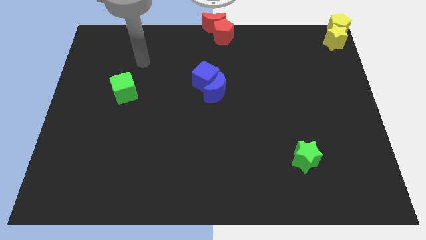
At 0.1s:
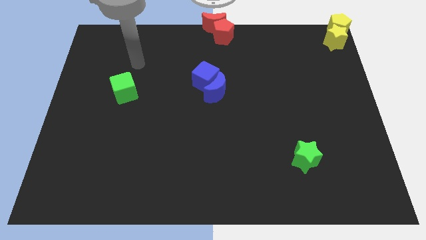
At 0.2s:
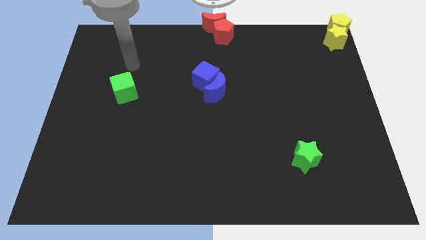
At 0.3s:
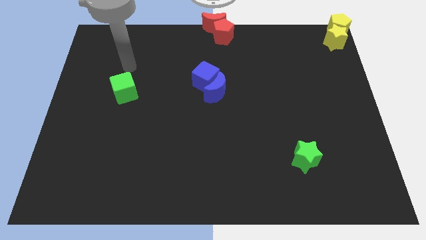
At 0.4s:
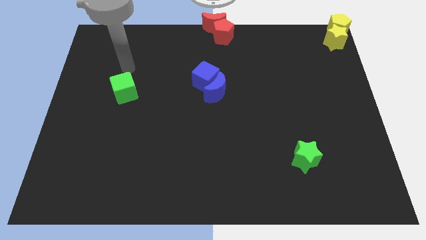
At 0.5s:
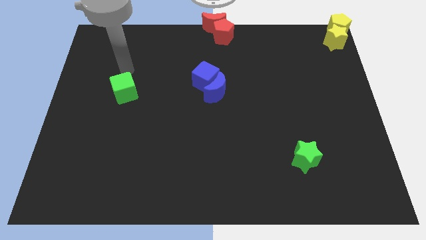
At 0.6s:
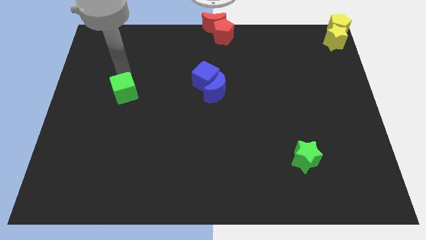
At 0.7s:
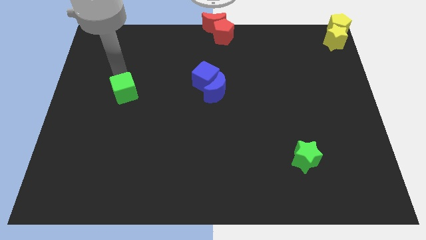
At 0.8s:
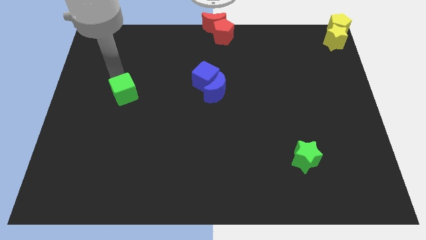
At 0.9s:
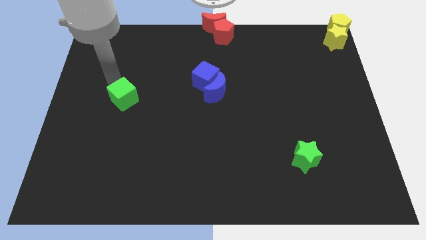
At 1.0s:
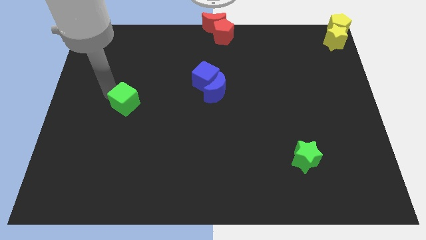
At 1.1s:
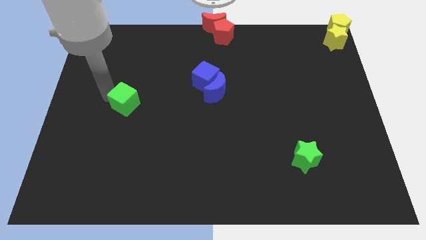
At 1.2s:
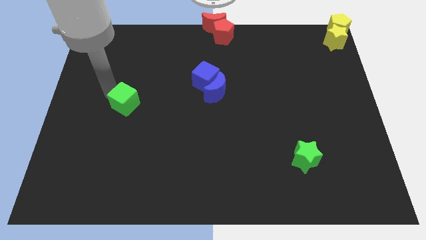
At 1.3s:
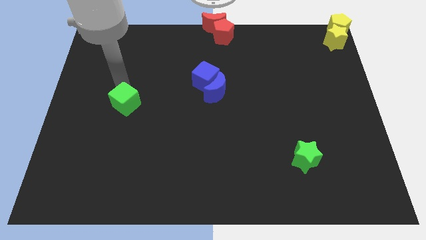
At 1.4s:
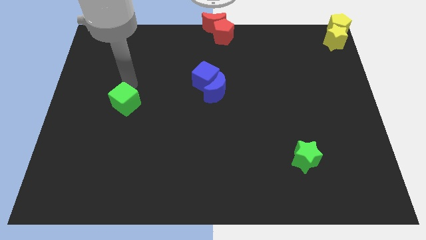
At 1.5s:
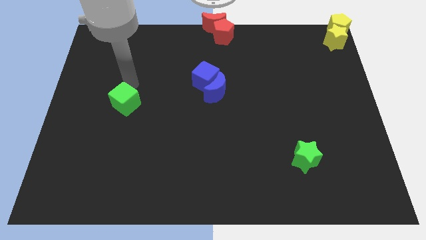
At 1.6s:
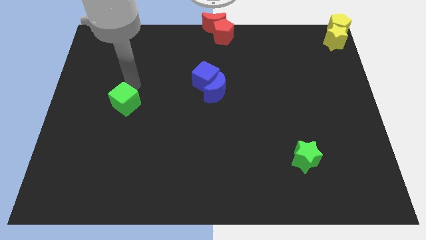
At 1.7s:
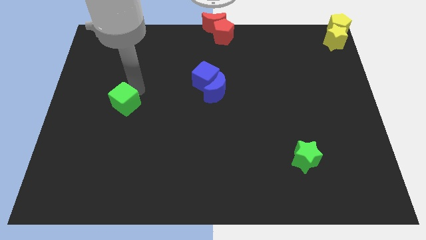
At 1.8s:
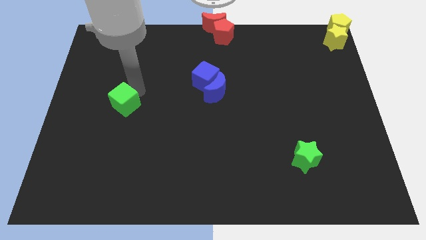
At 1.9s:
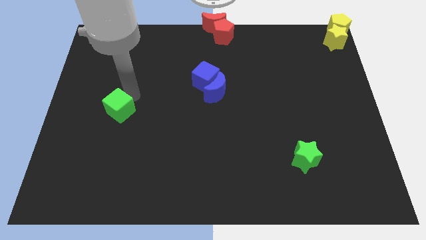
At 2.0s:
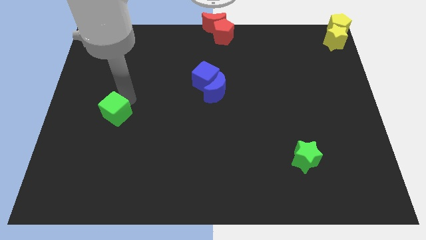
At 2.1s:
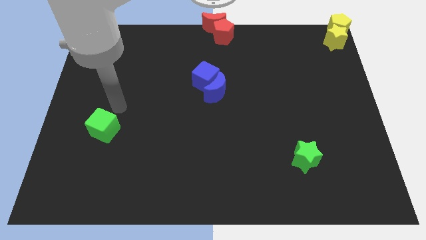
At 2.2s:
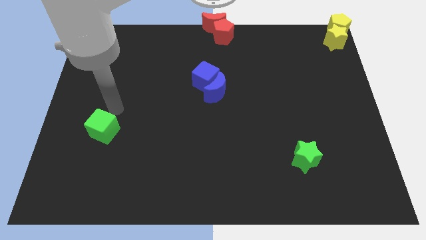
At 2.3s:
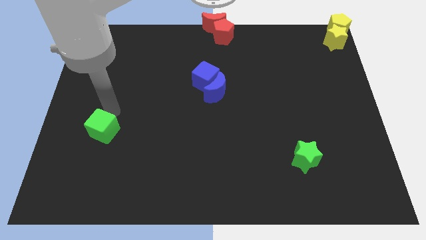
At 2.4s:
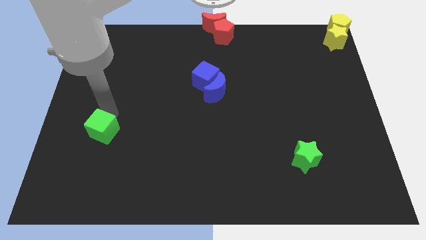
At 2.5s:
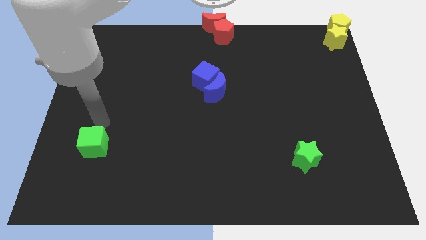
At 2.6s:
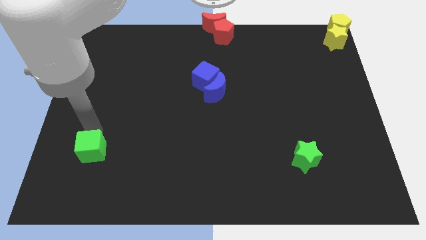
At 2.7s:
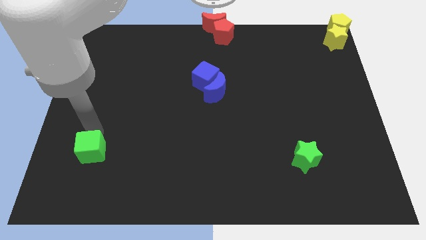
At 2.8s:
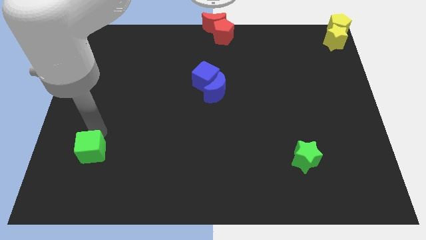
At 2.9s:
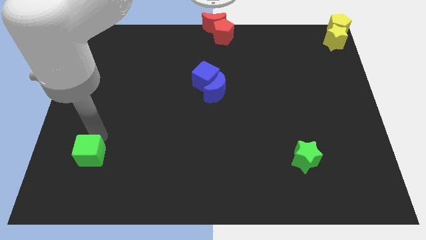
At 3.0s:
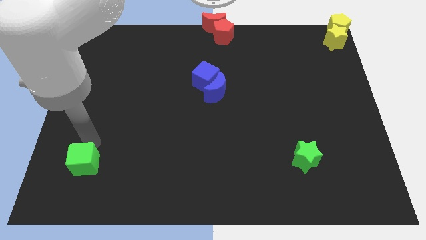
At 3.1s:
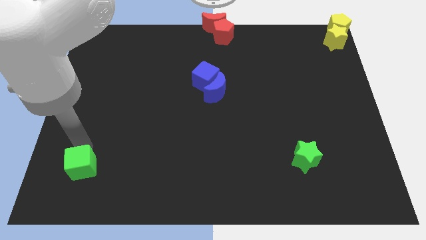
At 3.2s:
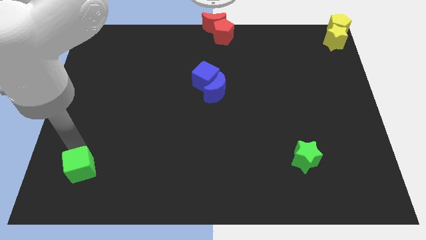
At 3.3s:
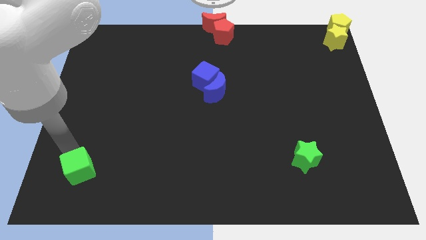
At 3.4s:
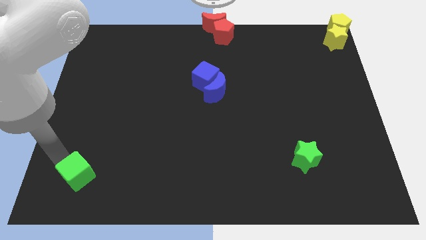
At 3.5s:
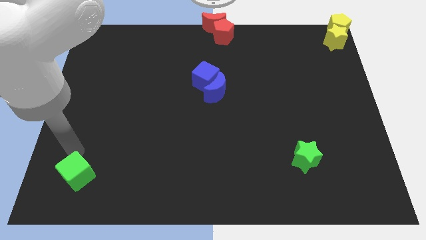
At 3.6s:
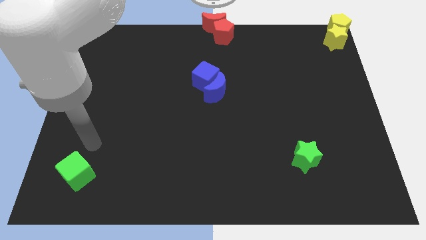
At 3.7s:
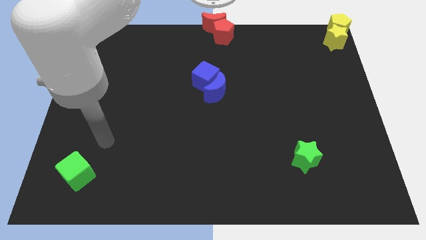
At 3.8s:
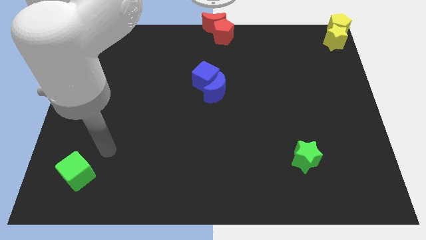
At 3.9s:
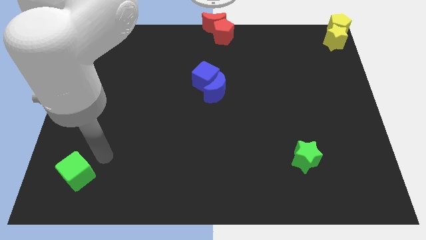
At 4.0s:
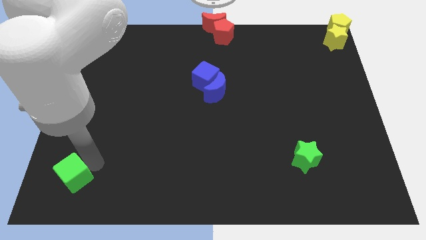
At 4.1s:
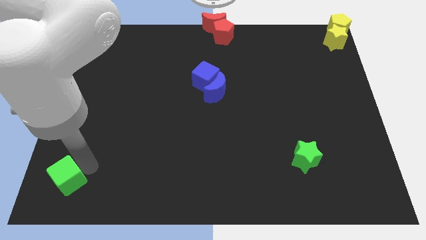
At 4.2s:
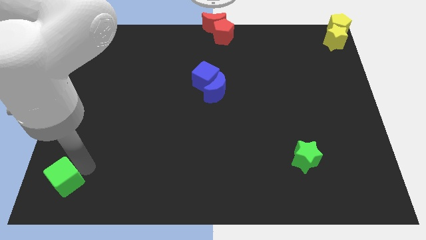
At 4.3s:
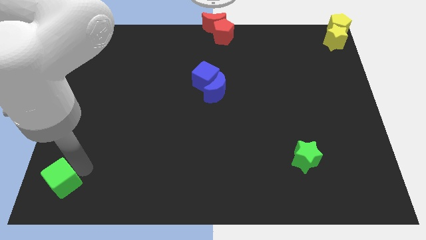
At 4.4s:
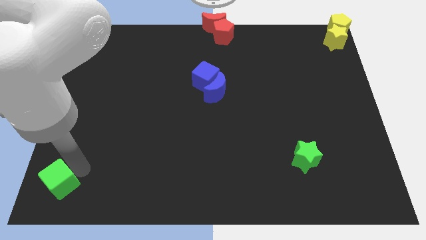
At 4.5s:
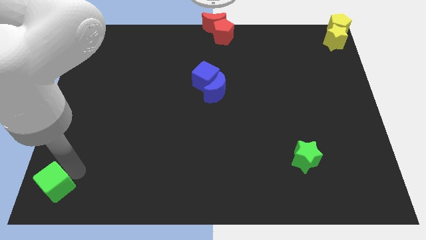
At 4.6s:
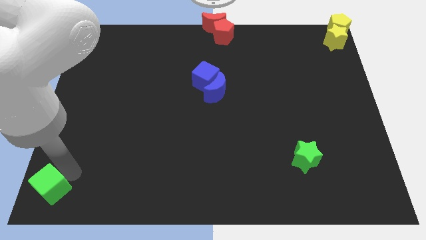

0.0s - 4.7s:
push the green block to the bottom left of the board

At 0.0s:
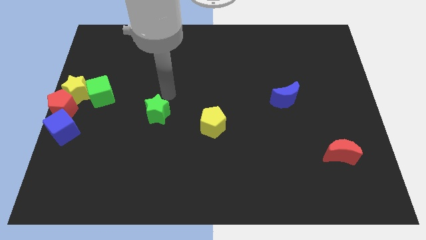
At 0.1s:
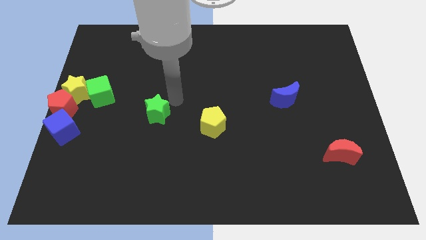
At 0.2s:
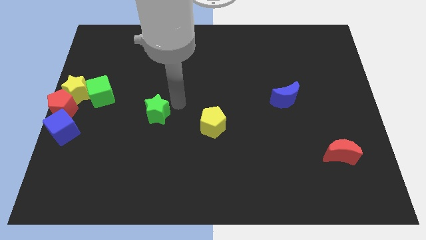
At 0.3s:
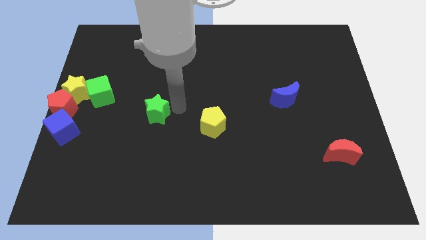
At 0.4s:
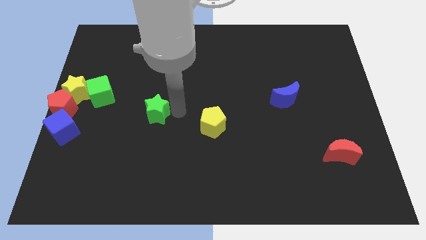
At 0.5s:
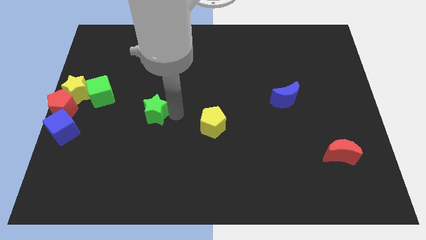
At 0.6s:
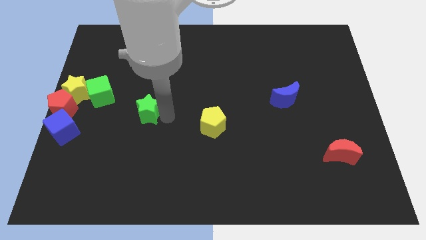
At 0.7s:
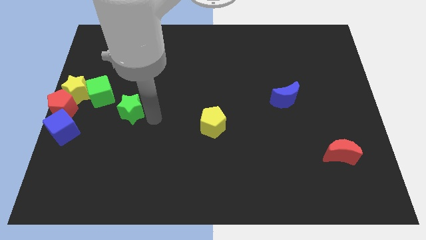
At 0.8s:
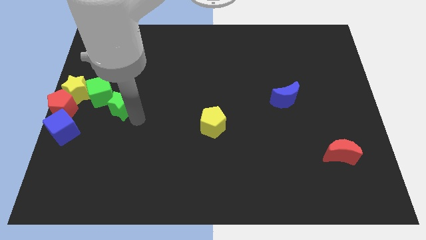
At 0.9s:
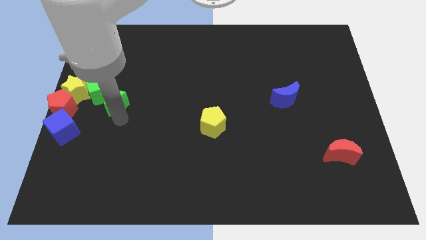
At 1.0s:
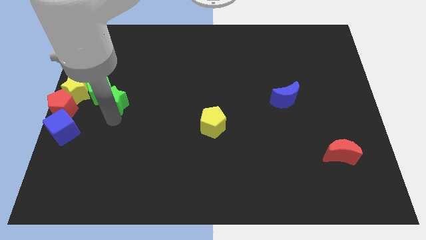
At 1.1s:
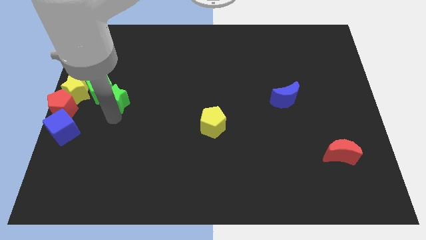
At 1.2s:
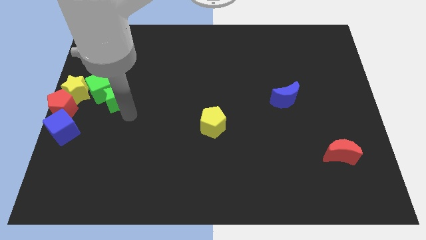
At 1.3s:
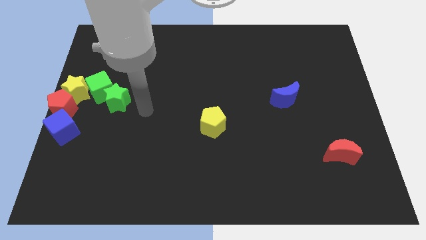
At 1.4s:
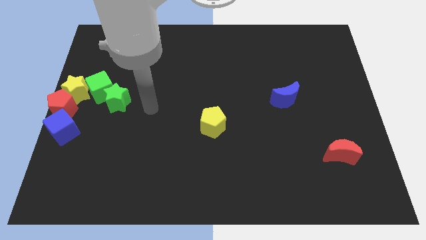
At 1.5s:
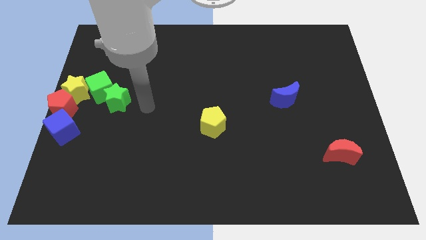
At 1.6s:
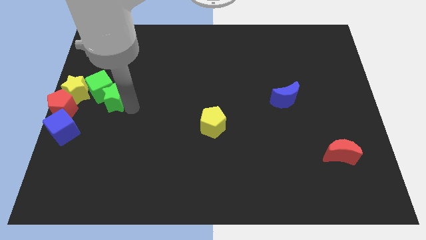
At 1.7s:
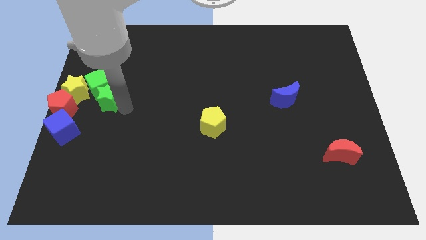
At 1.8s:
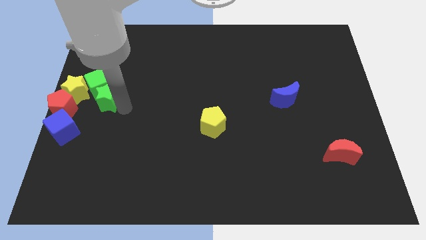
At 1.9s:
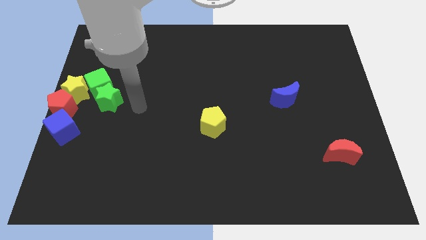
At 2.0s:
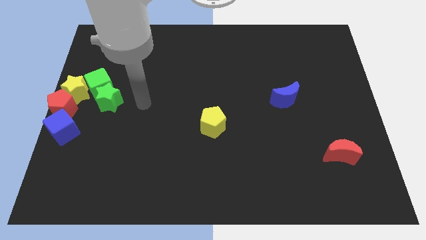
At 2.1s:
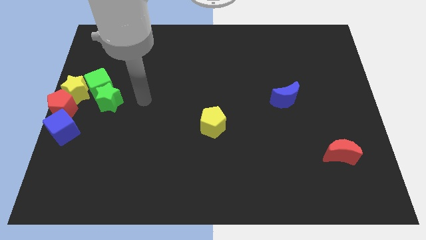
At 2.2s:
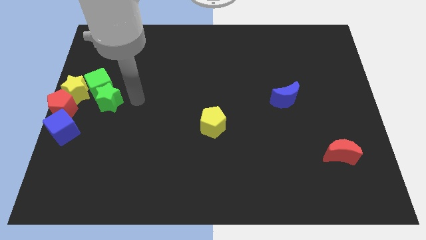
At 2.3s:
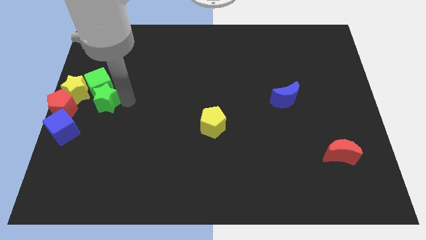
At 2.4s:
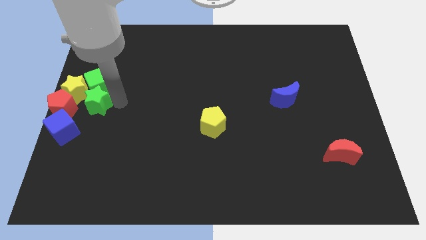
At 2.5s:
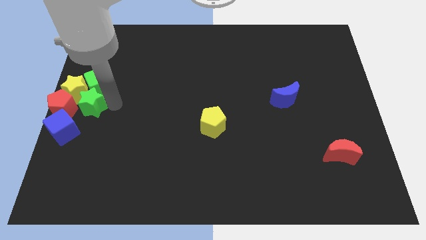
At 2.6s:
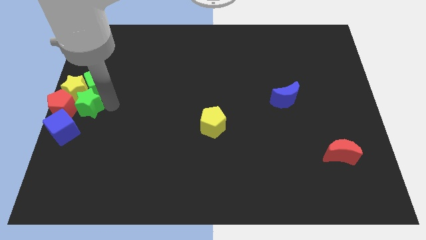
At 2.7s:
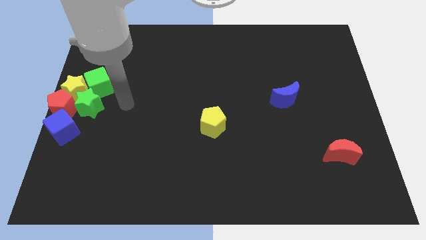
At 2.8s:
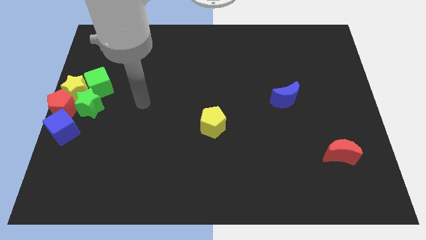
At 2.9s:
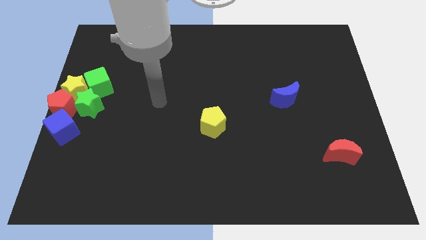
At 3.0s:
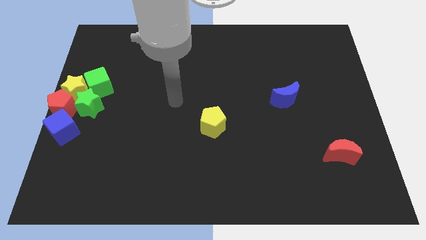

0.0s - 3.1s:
push the green star into the group of blocks

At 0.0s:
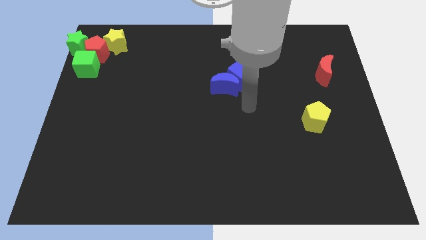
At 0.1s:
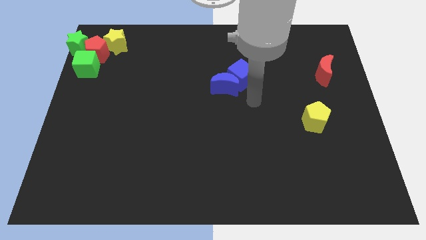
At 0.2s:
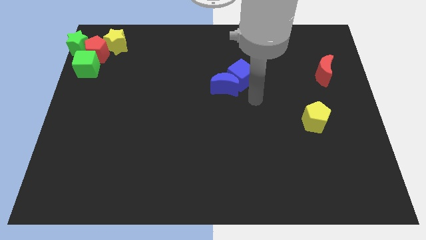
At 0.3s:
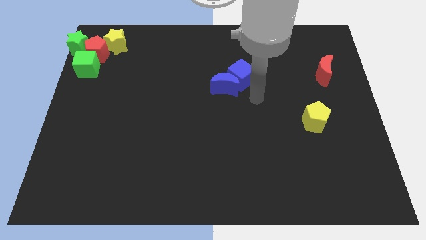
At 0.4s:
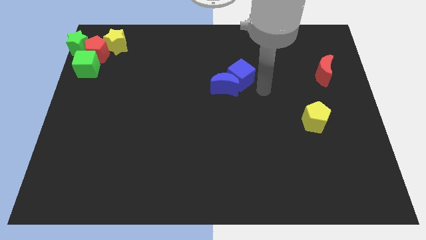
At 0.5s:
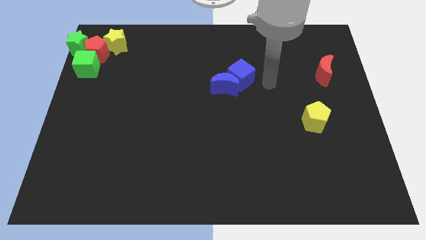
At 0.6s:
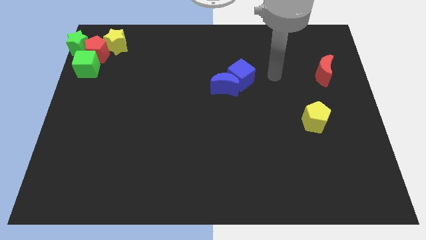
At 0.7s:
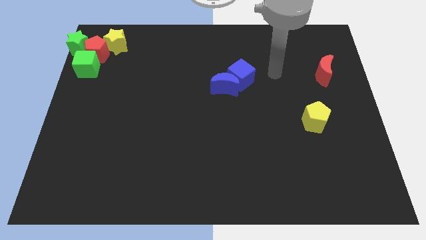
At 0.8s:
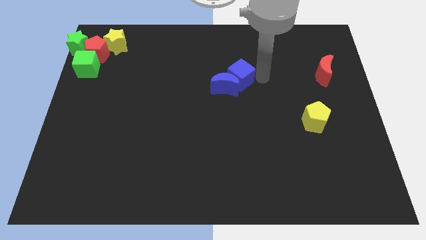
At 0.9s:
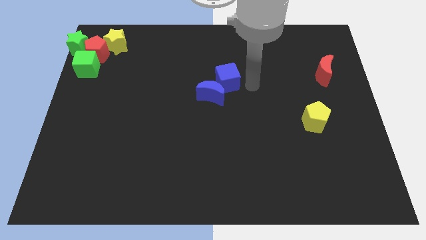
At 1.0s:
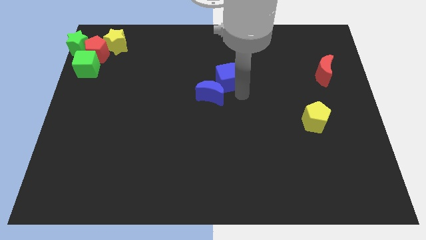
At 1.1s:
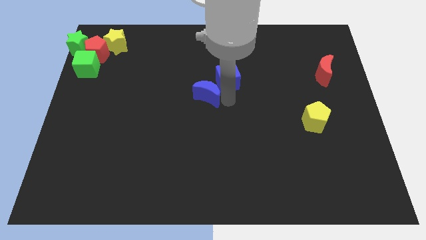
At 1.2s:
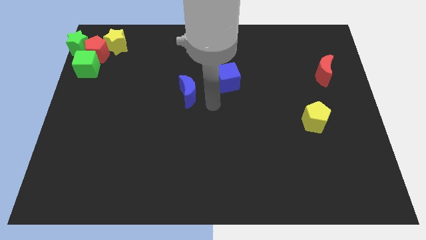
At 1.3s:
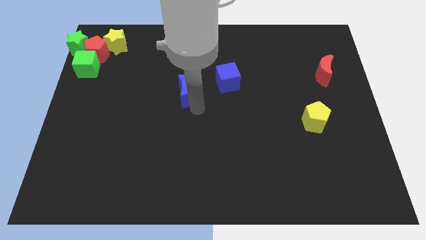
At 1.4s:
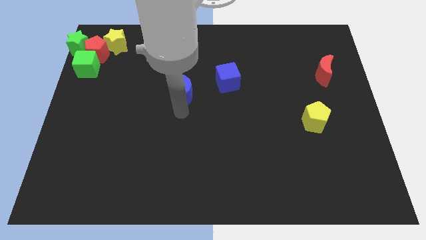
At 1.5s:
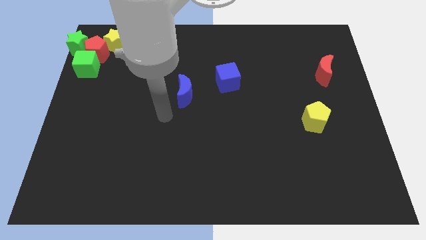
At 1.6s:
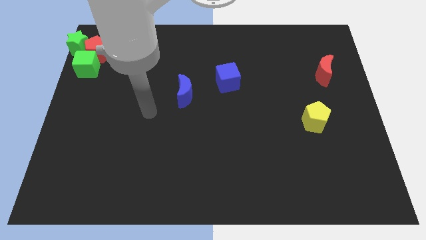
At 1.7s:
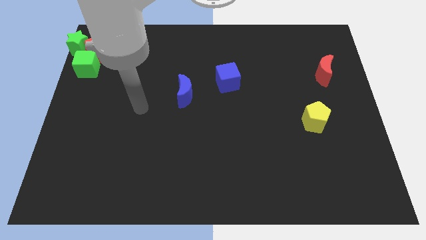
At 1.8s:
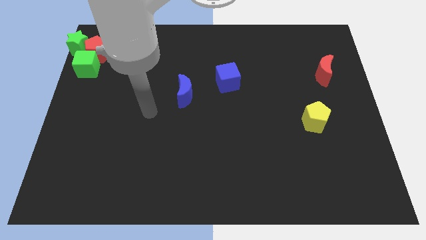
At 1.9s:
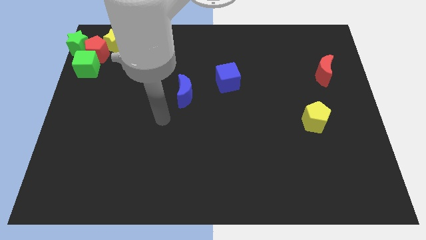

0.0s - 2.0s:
separate the blue blocks from each other
